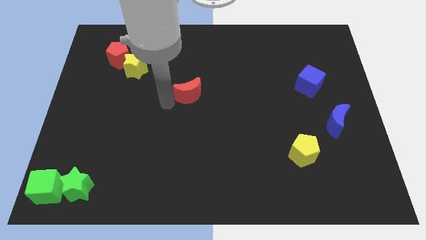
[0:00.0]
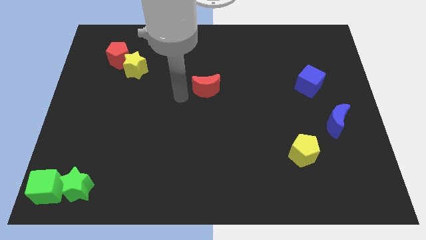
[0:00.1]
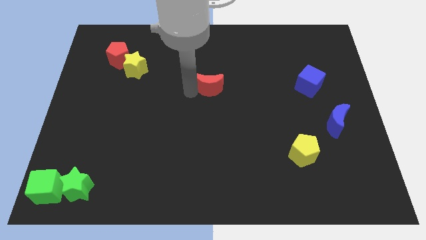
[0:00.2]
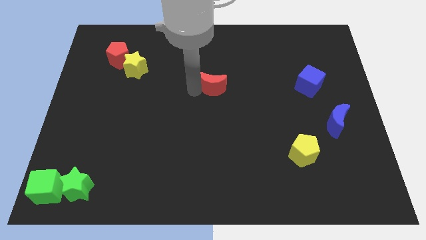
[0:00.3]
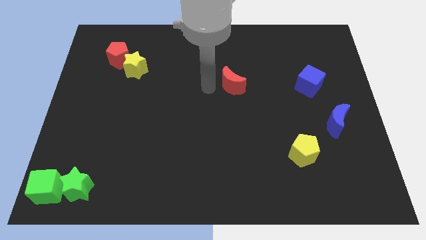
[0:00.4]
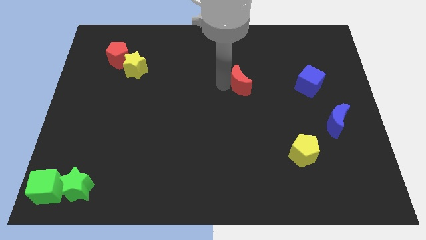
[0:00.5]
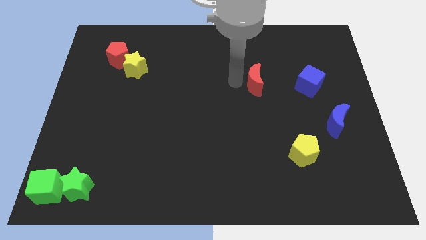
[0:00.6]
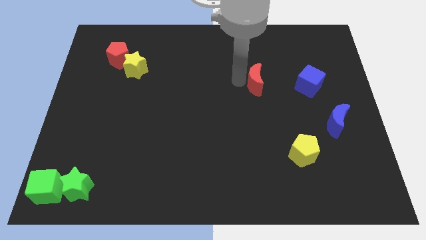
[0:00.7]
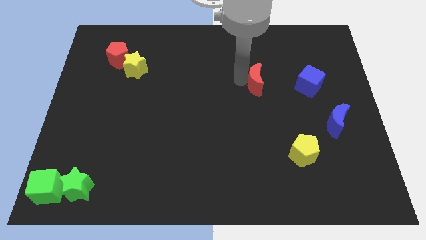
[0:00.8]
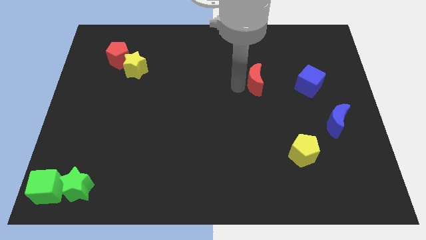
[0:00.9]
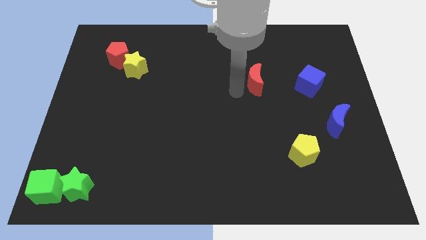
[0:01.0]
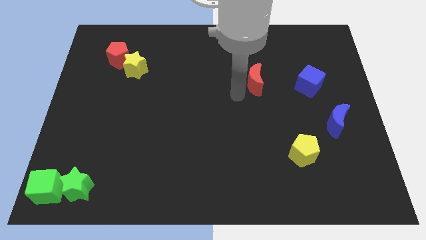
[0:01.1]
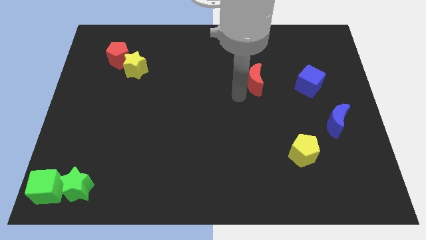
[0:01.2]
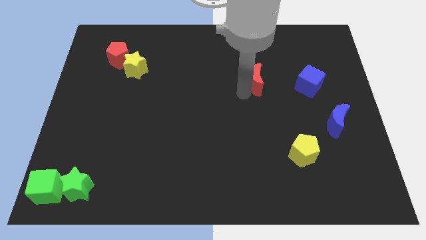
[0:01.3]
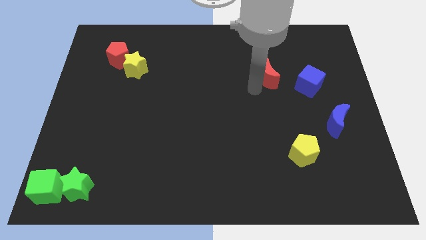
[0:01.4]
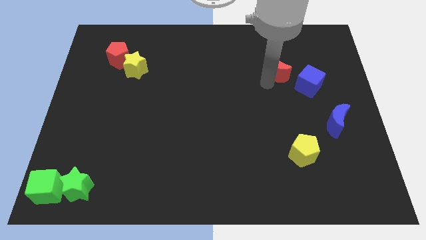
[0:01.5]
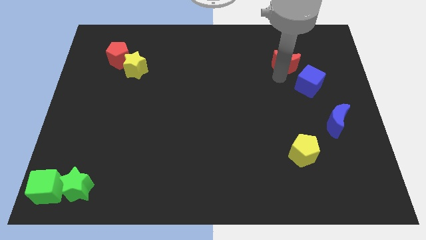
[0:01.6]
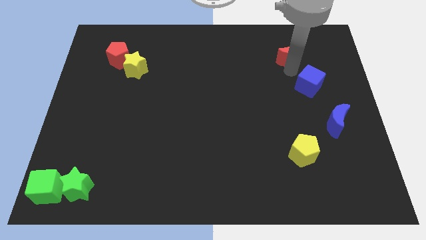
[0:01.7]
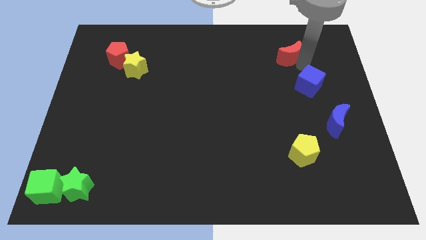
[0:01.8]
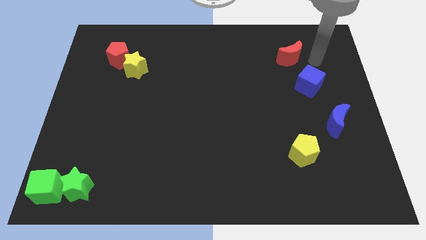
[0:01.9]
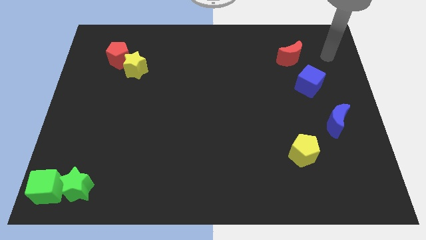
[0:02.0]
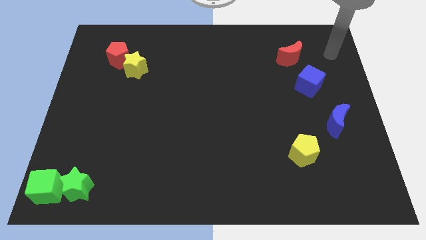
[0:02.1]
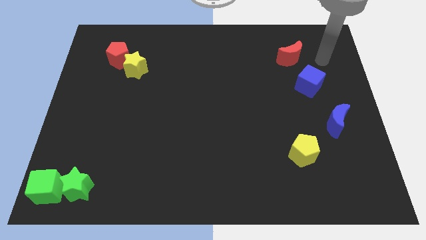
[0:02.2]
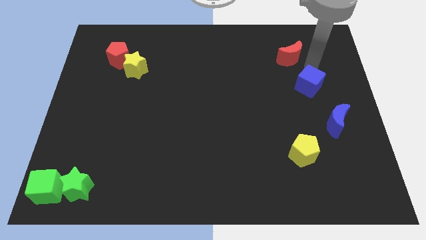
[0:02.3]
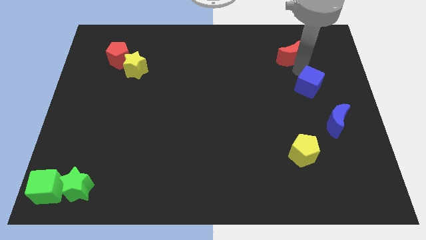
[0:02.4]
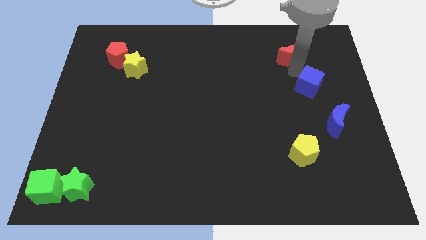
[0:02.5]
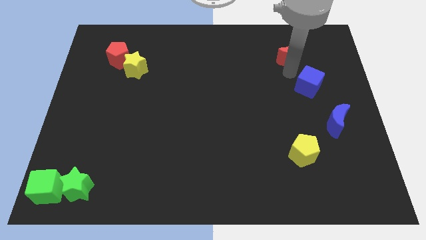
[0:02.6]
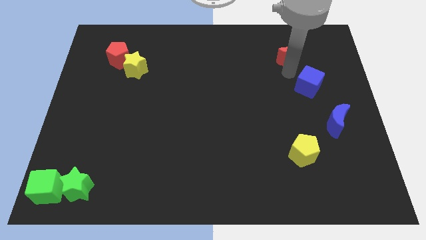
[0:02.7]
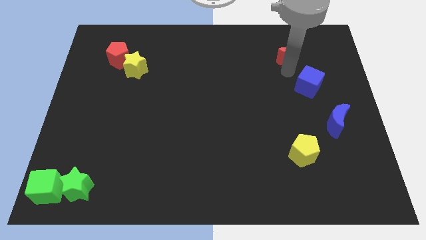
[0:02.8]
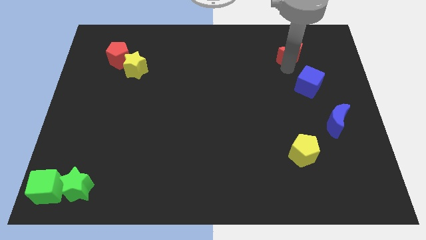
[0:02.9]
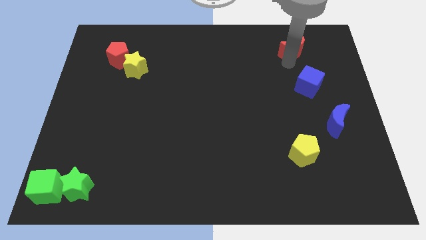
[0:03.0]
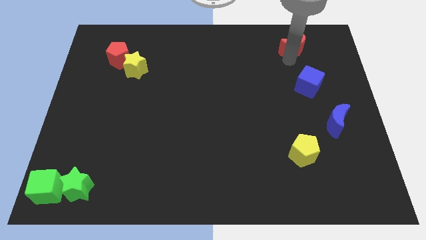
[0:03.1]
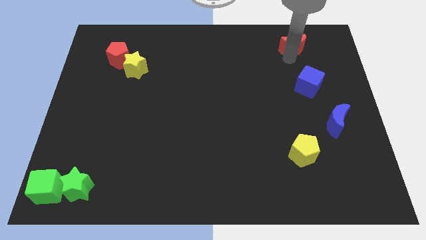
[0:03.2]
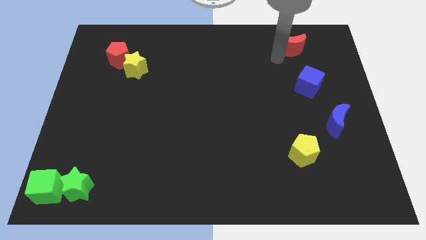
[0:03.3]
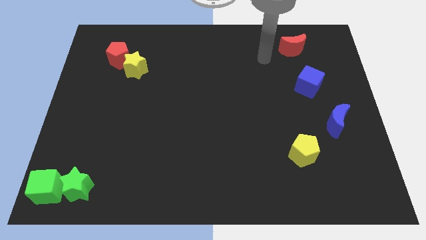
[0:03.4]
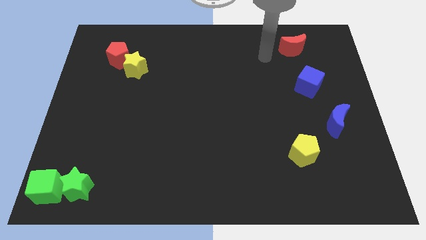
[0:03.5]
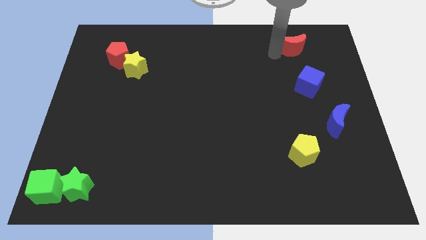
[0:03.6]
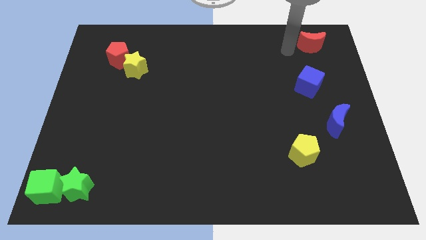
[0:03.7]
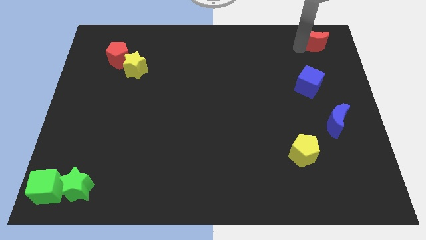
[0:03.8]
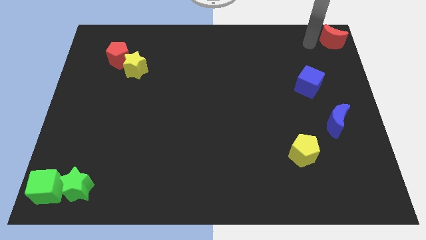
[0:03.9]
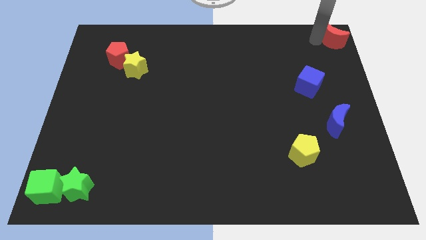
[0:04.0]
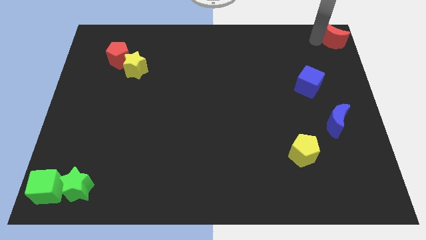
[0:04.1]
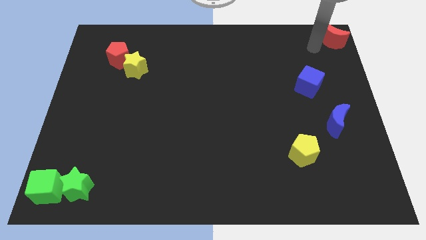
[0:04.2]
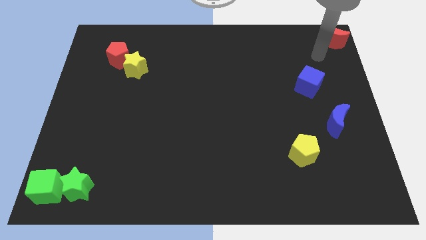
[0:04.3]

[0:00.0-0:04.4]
move the red crescent to the top right of the board

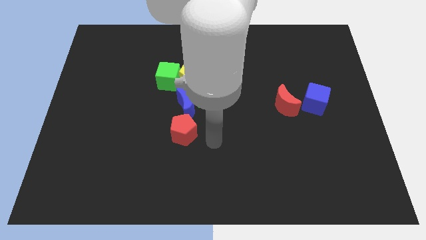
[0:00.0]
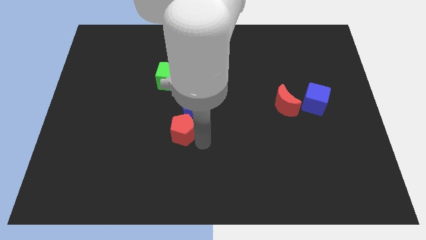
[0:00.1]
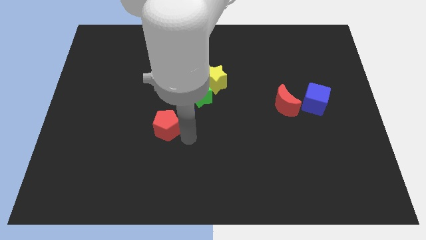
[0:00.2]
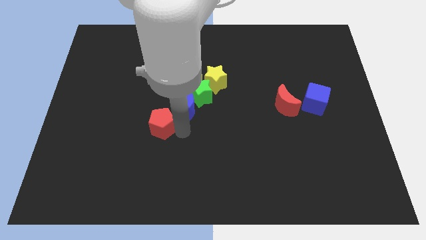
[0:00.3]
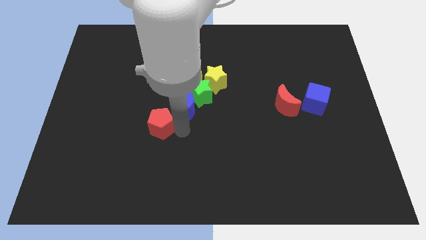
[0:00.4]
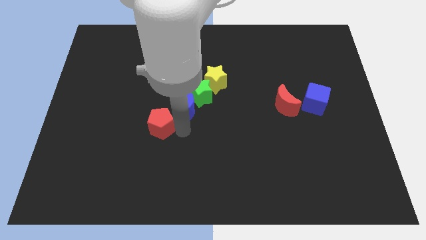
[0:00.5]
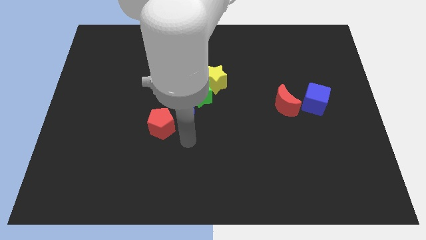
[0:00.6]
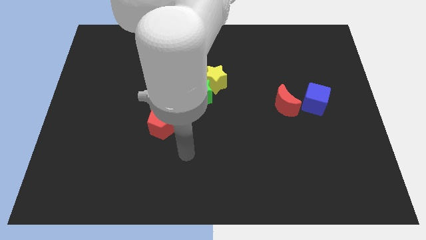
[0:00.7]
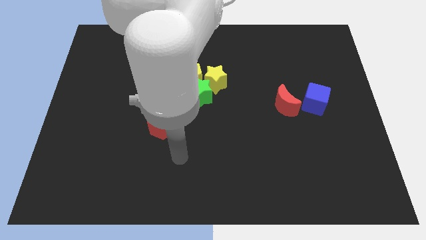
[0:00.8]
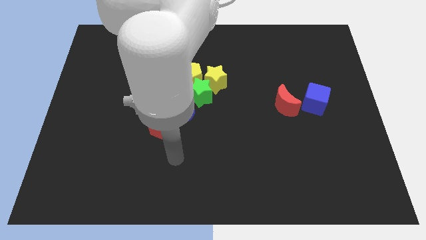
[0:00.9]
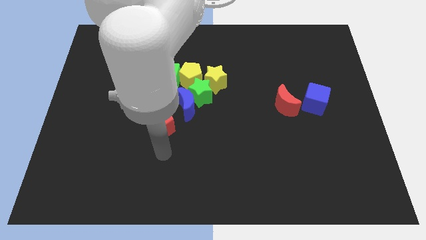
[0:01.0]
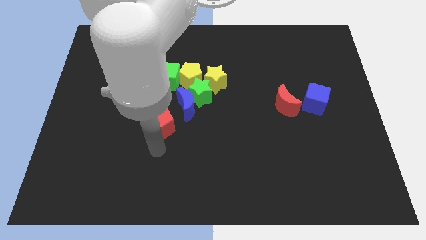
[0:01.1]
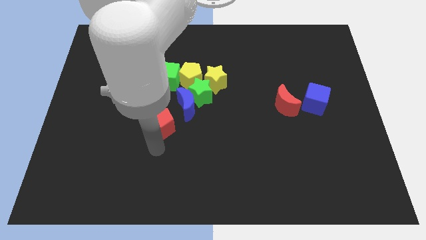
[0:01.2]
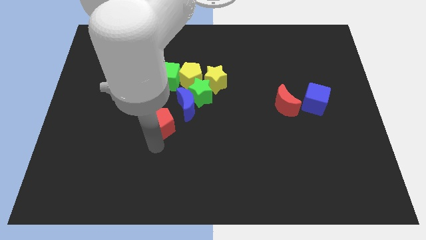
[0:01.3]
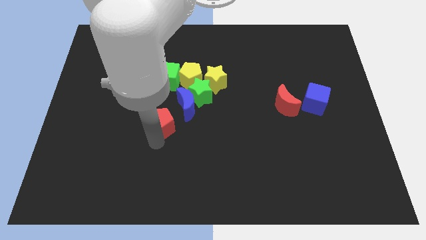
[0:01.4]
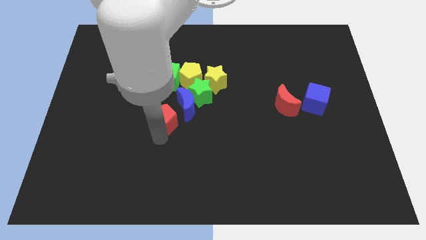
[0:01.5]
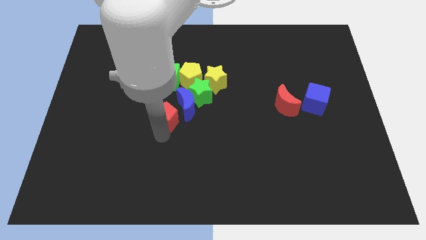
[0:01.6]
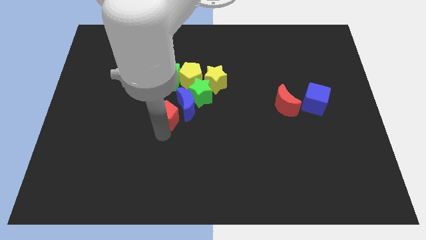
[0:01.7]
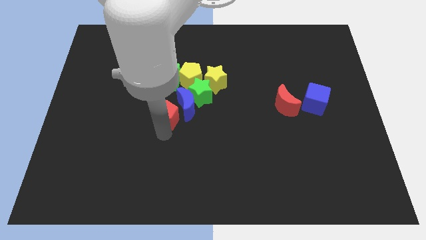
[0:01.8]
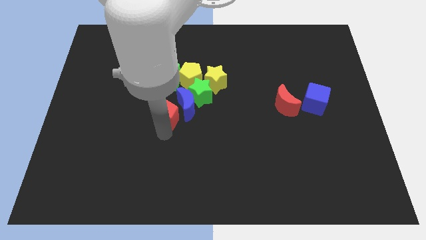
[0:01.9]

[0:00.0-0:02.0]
put the red pentagon below the green cube

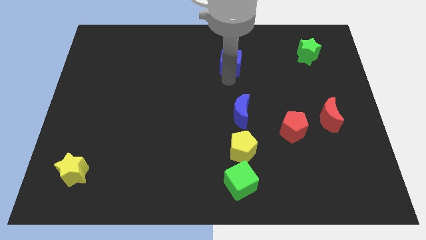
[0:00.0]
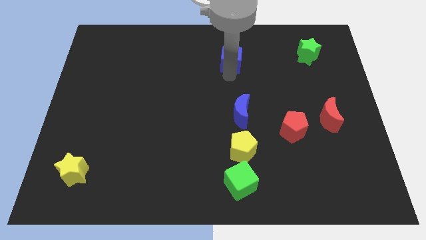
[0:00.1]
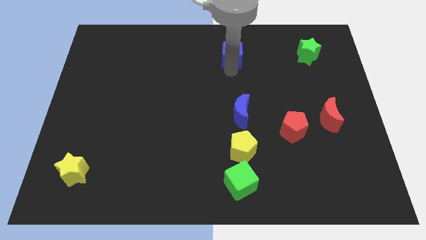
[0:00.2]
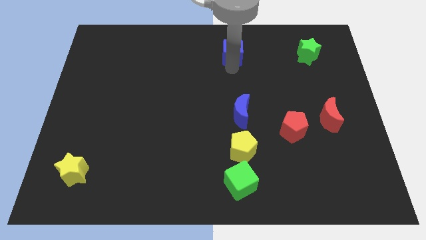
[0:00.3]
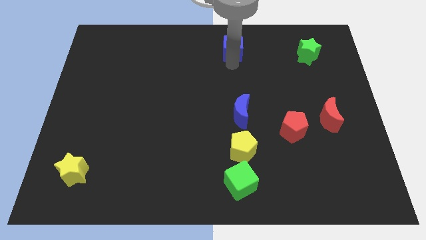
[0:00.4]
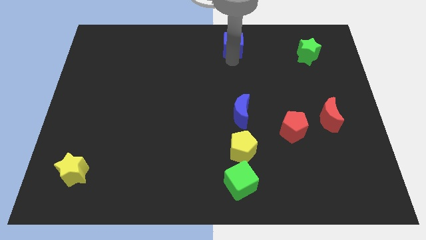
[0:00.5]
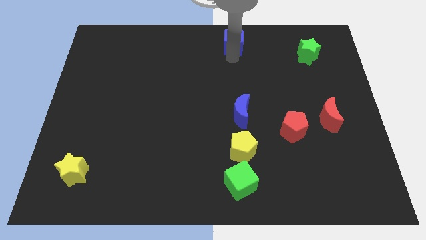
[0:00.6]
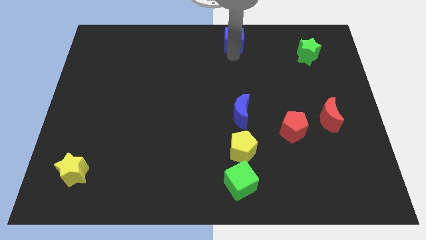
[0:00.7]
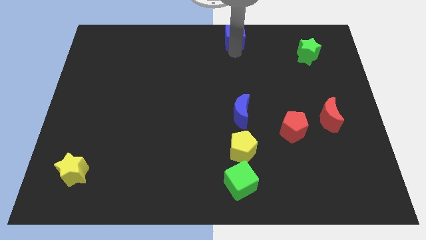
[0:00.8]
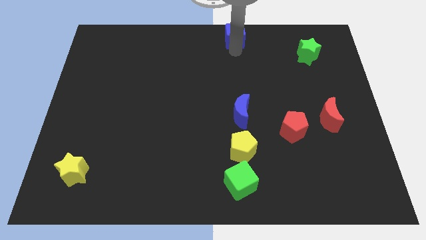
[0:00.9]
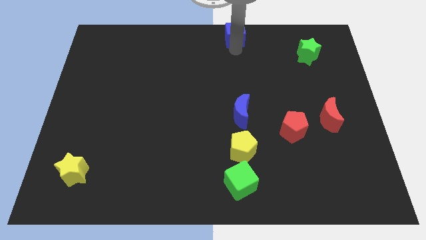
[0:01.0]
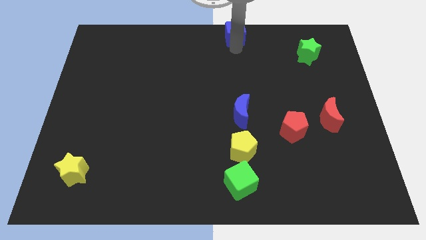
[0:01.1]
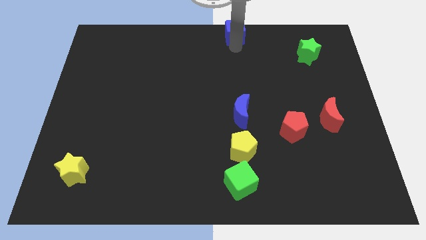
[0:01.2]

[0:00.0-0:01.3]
move the blue cube to the top center

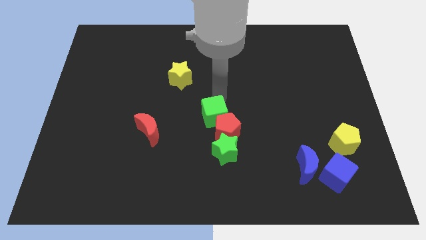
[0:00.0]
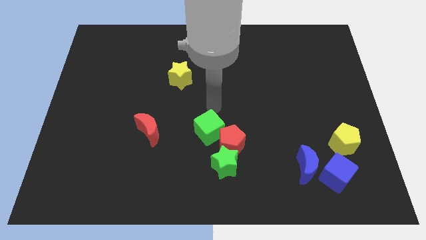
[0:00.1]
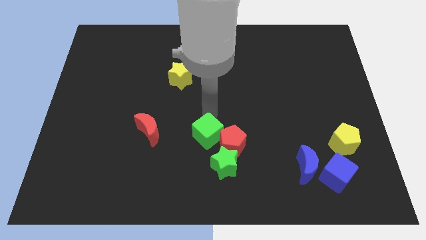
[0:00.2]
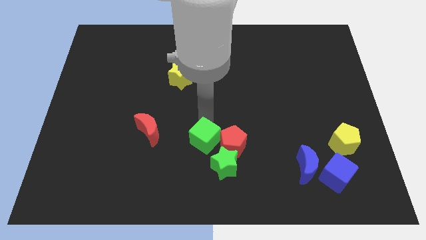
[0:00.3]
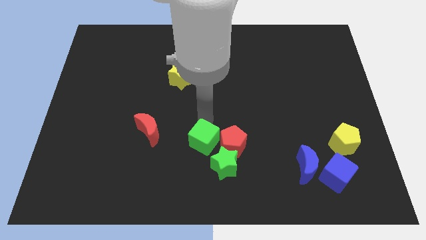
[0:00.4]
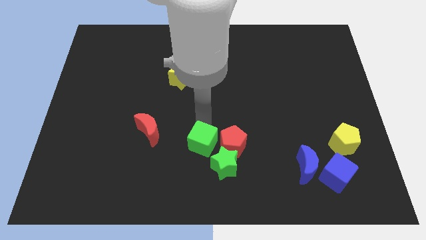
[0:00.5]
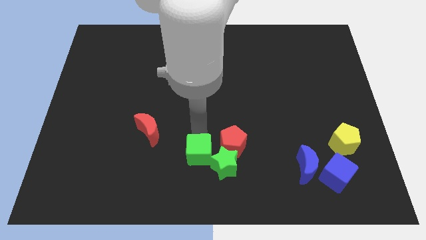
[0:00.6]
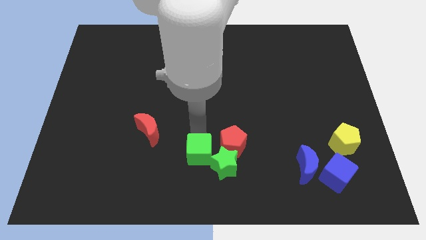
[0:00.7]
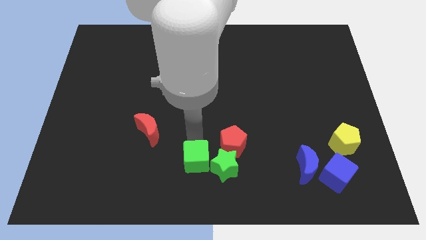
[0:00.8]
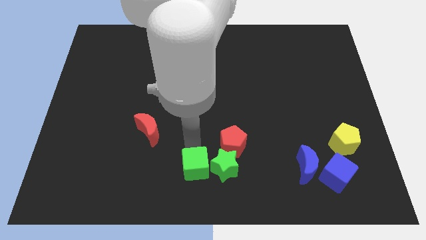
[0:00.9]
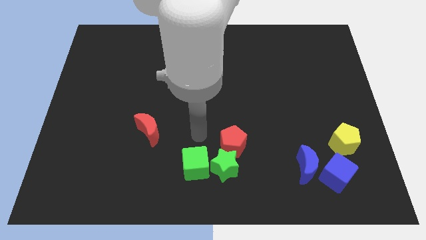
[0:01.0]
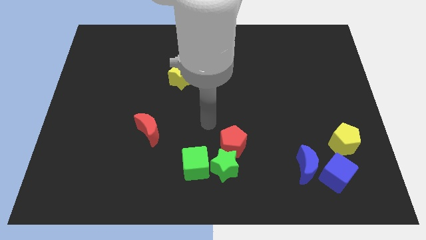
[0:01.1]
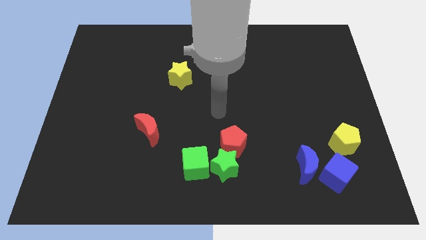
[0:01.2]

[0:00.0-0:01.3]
push the green cube to the left of the green star
